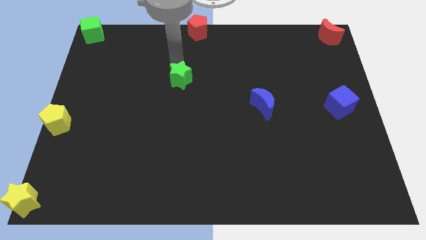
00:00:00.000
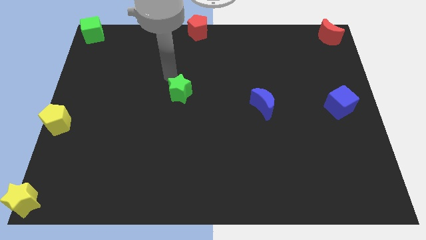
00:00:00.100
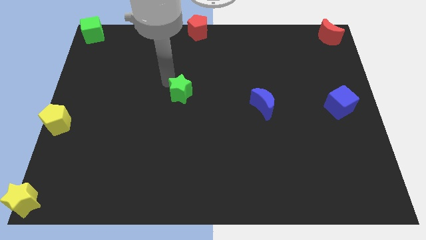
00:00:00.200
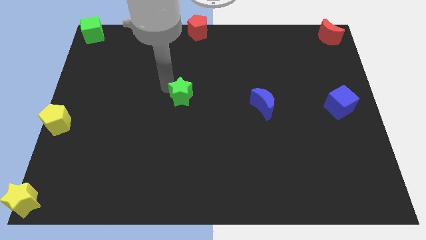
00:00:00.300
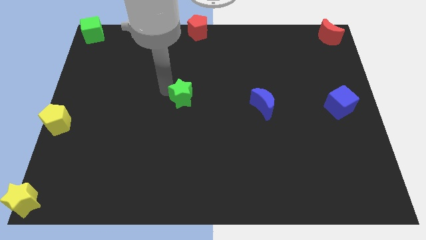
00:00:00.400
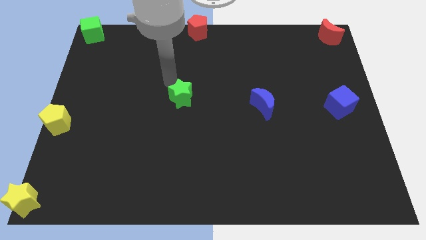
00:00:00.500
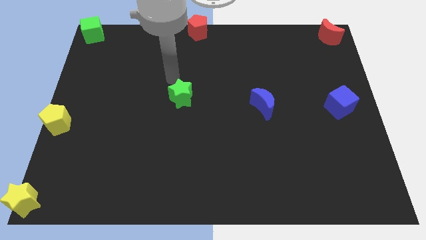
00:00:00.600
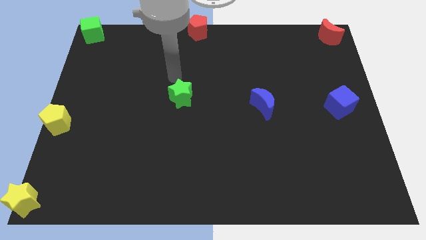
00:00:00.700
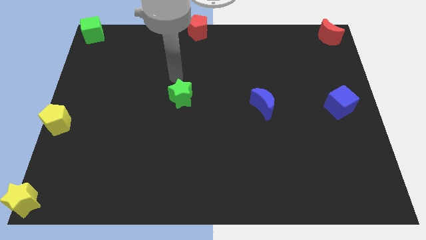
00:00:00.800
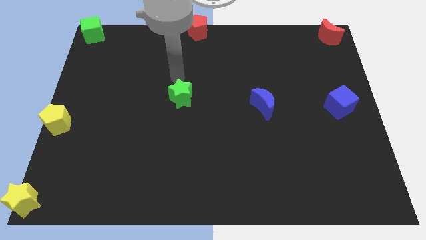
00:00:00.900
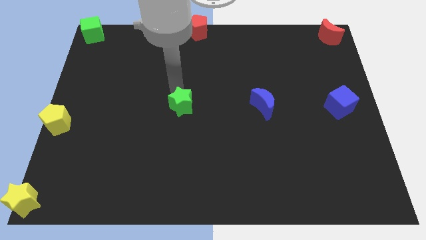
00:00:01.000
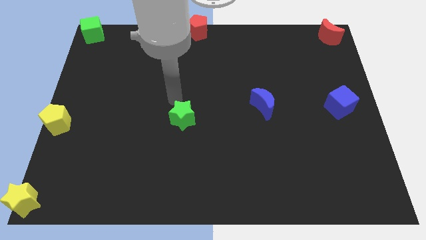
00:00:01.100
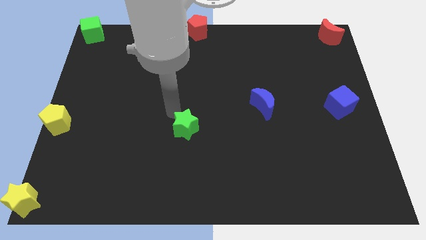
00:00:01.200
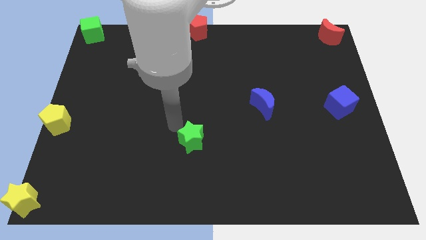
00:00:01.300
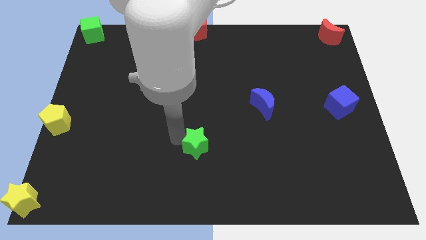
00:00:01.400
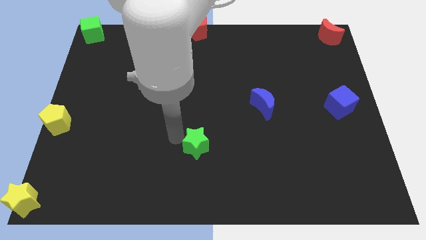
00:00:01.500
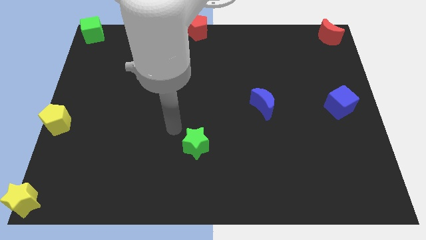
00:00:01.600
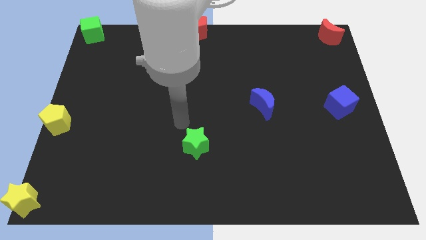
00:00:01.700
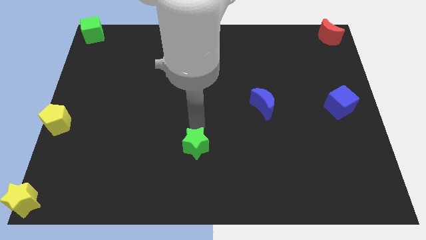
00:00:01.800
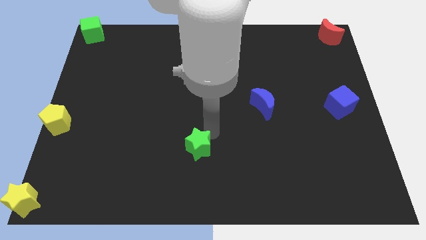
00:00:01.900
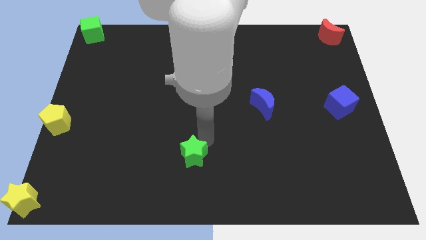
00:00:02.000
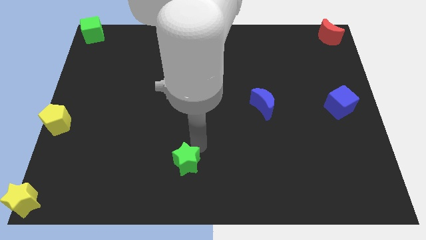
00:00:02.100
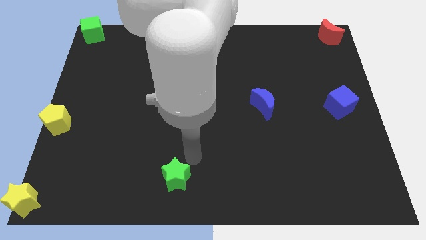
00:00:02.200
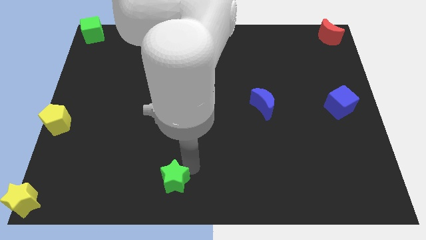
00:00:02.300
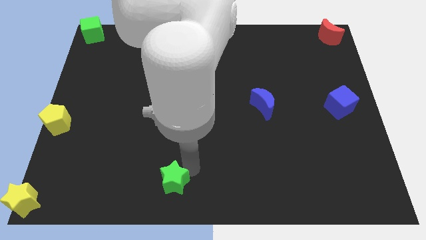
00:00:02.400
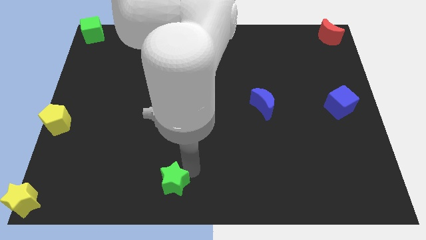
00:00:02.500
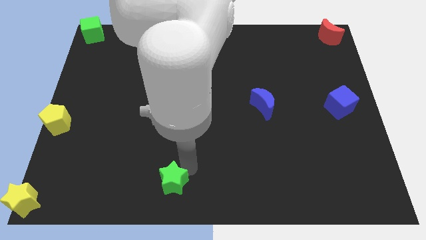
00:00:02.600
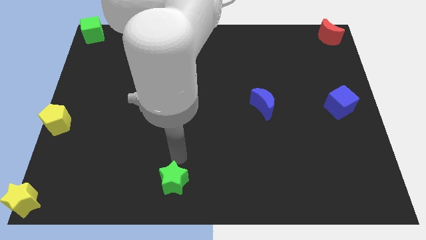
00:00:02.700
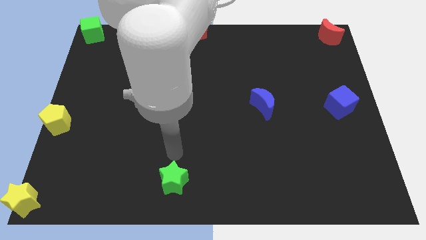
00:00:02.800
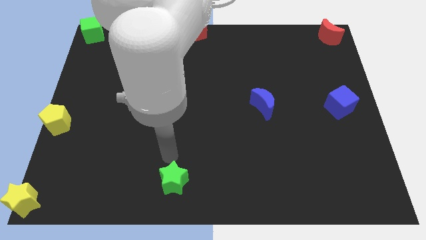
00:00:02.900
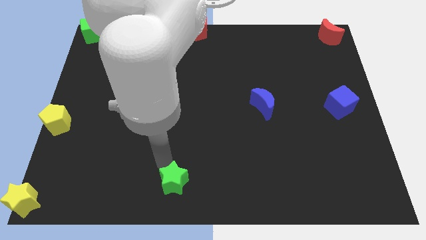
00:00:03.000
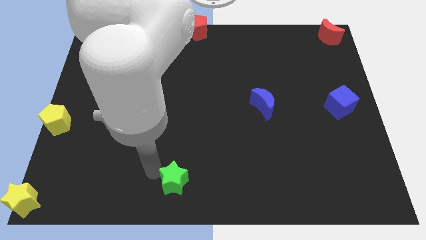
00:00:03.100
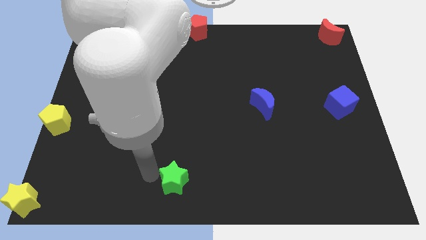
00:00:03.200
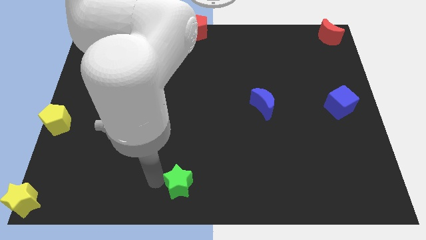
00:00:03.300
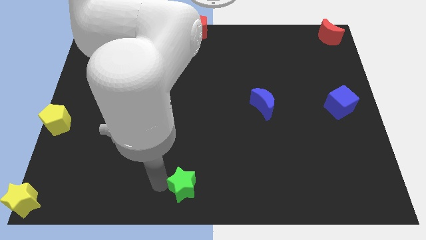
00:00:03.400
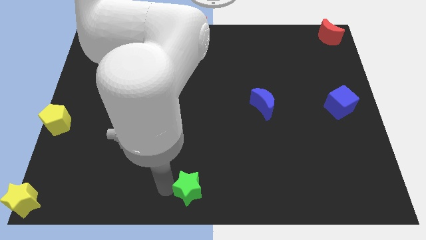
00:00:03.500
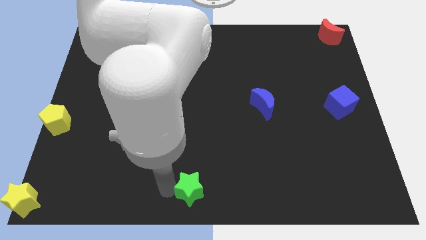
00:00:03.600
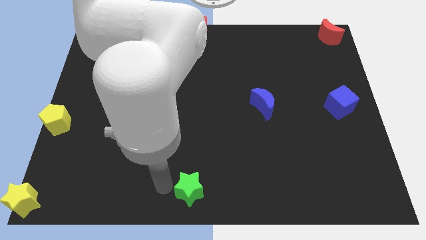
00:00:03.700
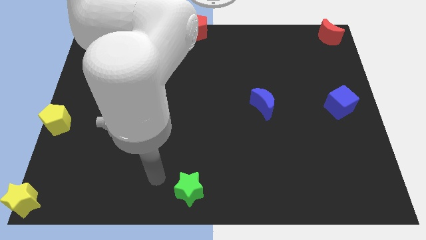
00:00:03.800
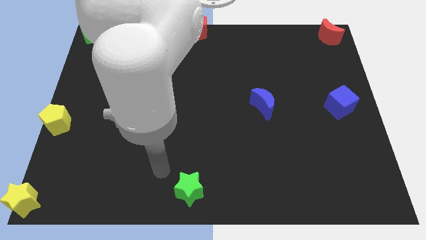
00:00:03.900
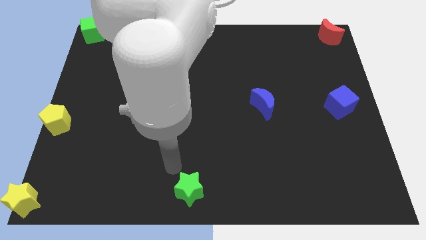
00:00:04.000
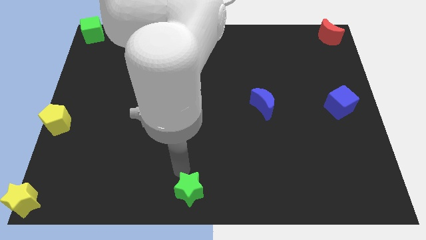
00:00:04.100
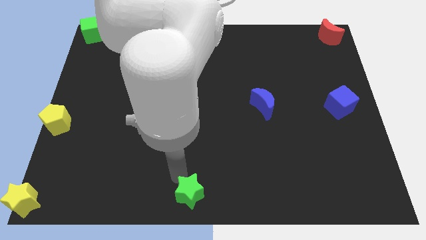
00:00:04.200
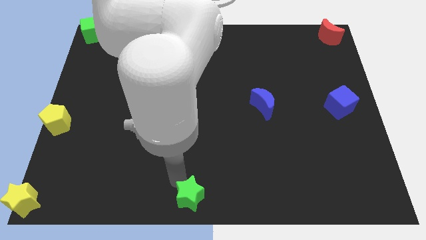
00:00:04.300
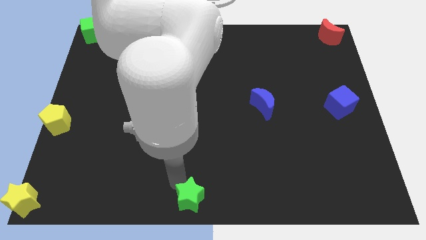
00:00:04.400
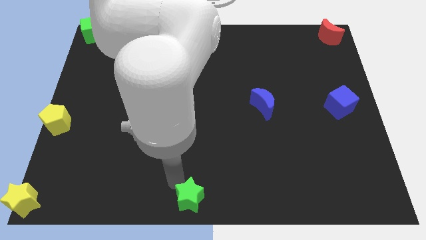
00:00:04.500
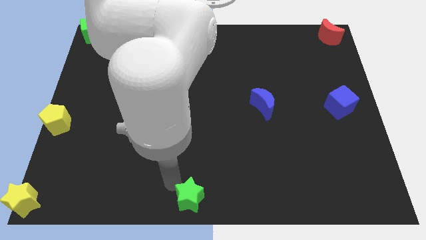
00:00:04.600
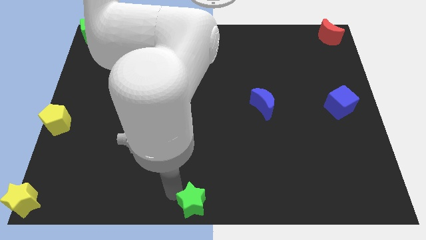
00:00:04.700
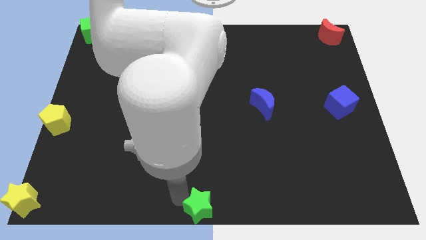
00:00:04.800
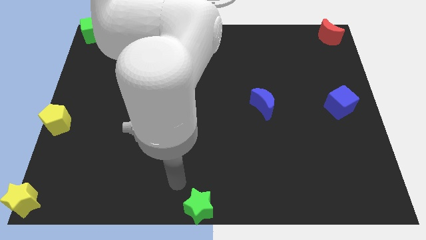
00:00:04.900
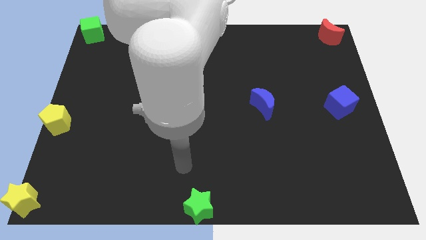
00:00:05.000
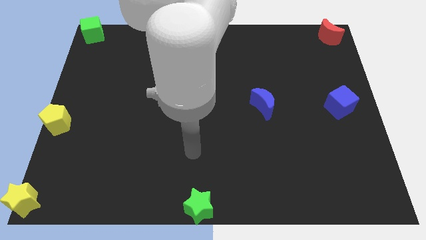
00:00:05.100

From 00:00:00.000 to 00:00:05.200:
push the green star to the bottom center of the board

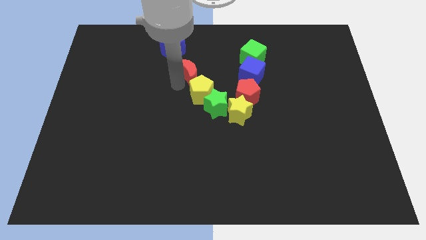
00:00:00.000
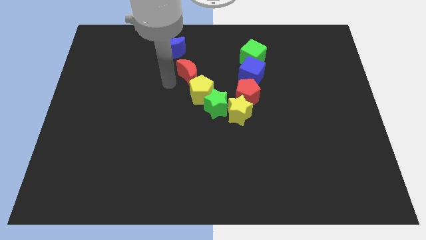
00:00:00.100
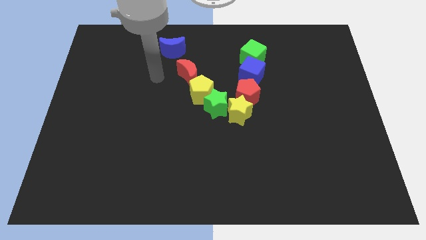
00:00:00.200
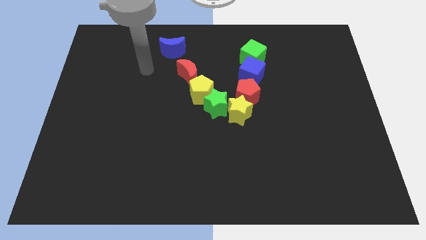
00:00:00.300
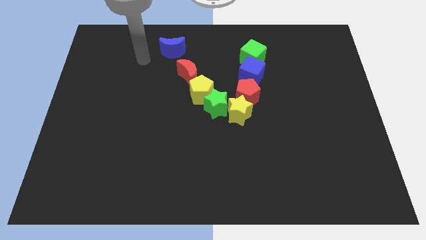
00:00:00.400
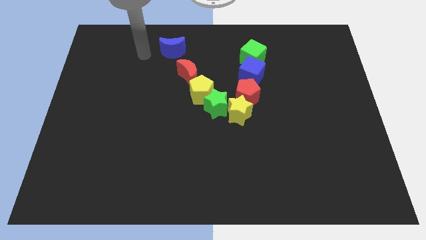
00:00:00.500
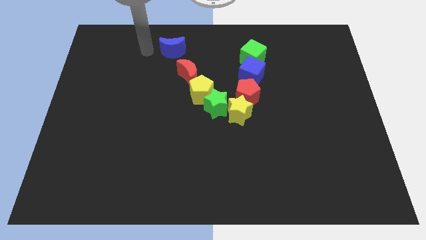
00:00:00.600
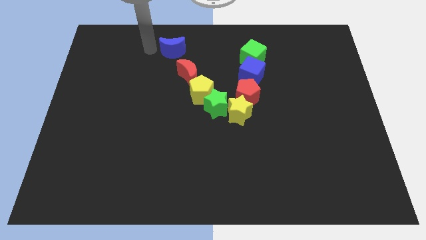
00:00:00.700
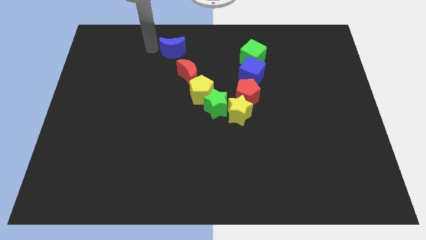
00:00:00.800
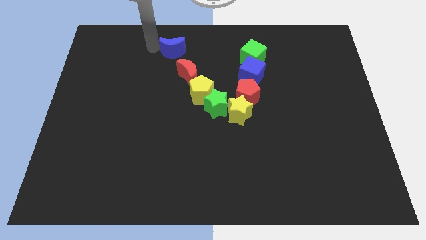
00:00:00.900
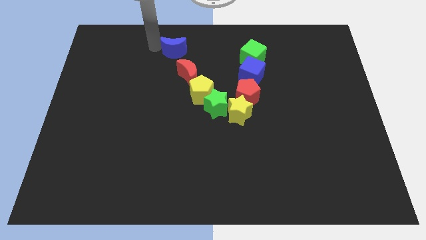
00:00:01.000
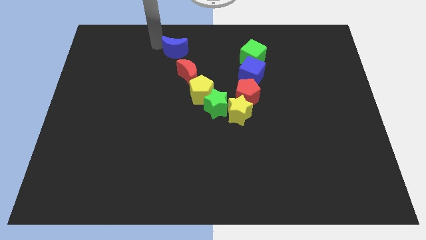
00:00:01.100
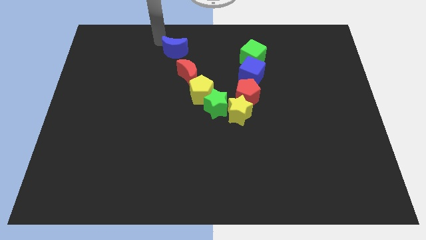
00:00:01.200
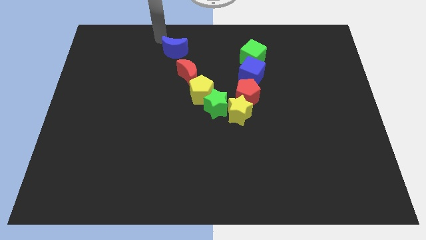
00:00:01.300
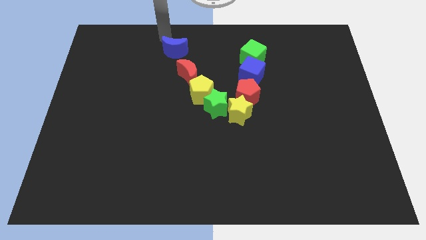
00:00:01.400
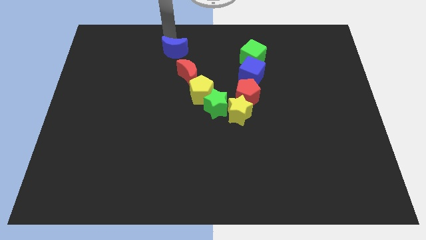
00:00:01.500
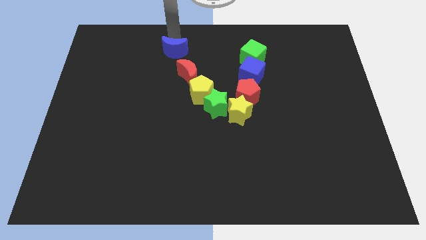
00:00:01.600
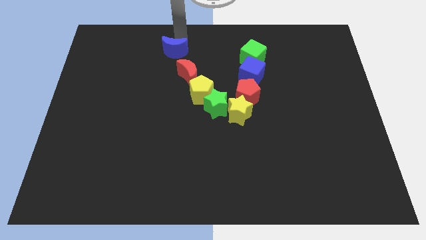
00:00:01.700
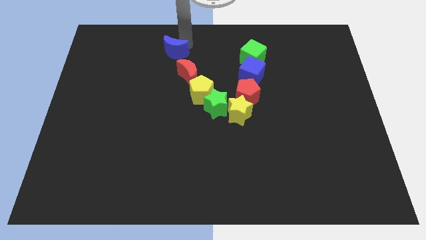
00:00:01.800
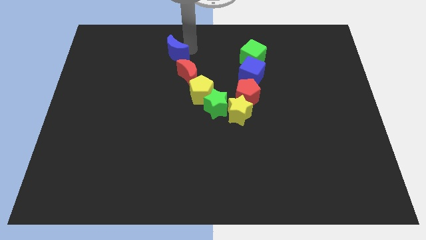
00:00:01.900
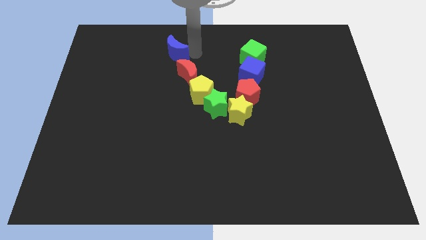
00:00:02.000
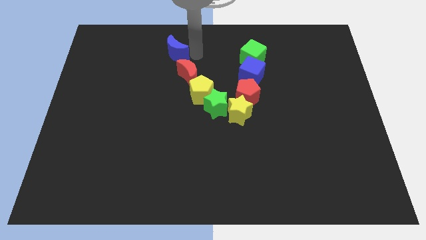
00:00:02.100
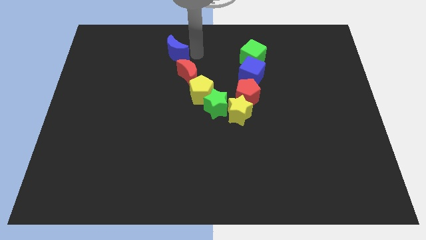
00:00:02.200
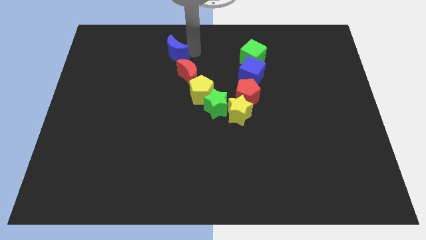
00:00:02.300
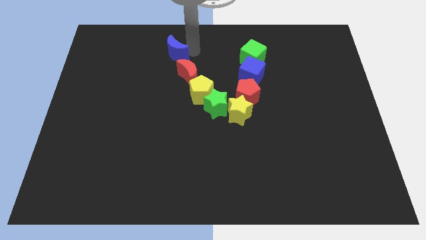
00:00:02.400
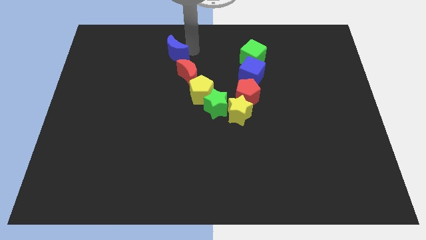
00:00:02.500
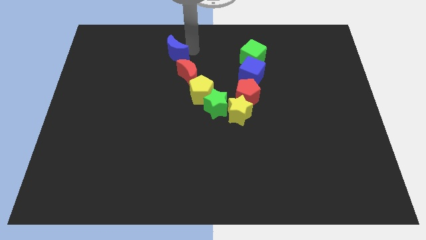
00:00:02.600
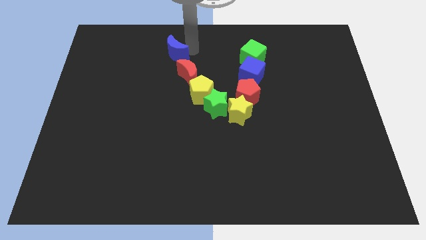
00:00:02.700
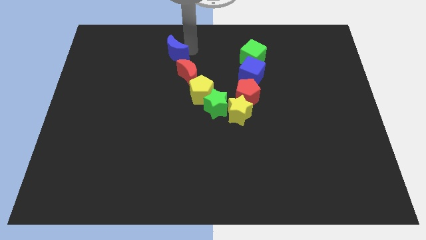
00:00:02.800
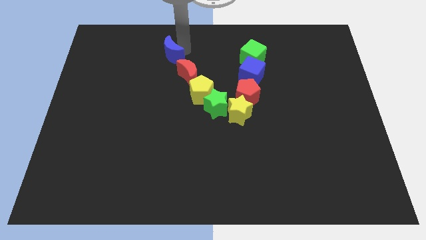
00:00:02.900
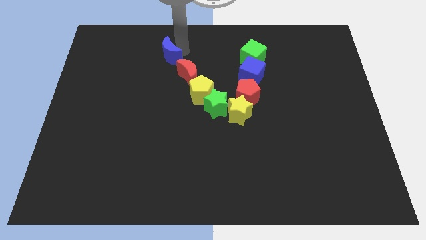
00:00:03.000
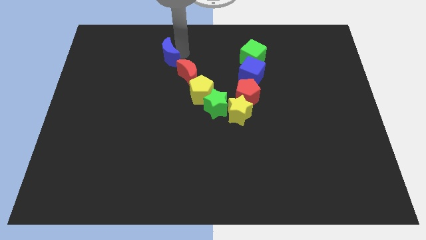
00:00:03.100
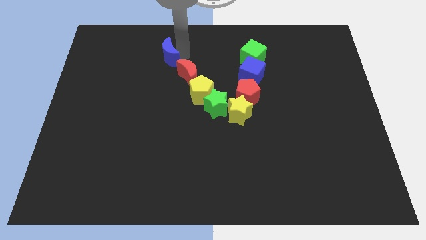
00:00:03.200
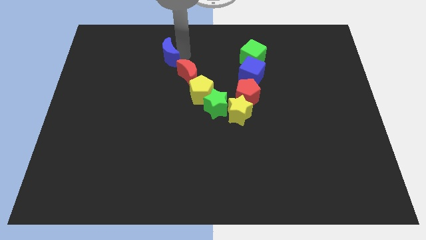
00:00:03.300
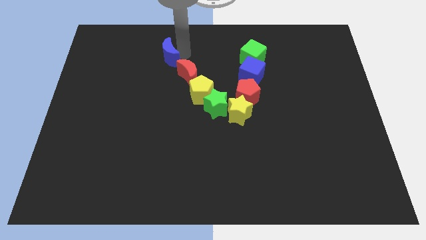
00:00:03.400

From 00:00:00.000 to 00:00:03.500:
put the blue moon diagonally above the top left side of the red crescent
